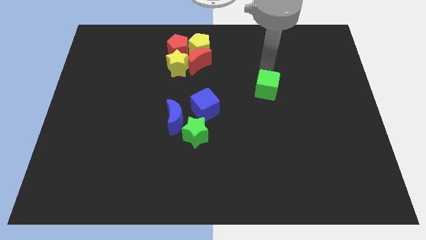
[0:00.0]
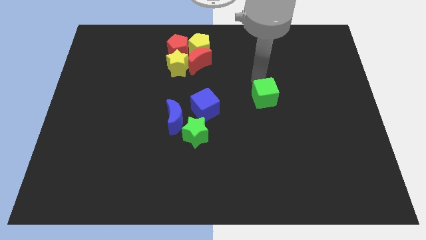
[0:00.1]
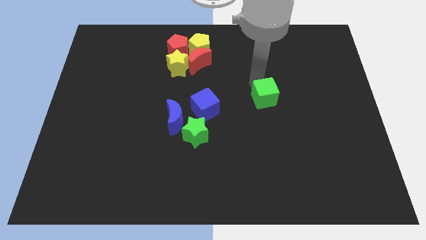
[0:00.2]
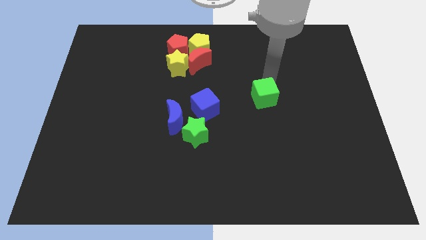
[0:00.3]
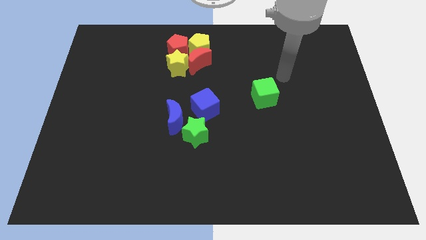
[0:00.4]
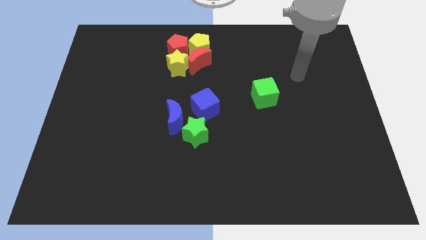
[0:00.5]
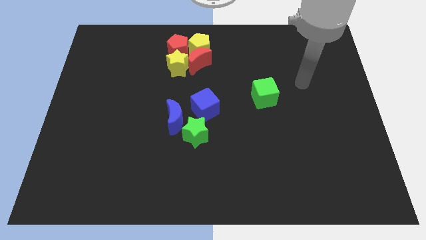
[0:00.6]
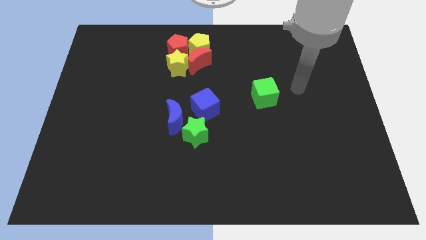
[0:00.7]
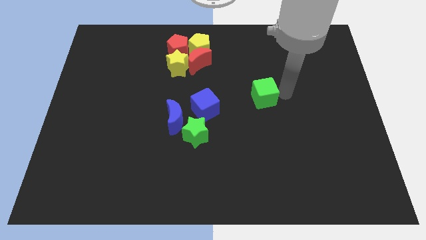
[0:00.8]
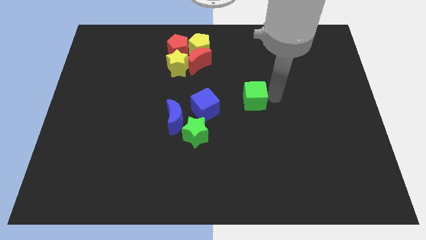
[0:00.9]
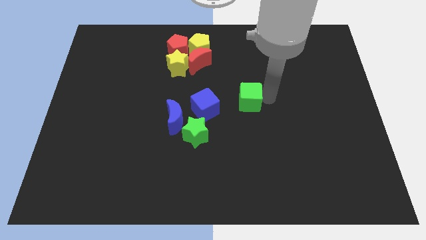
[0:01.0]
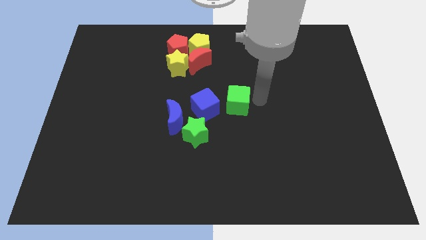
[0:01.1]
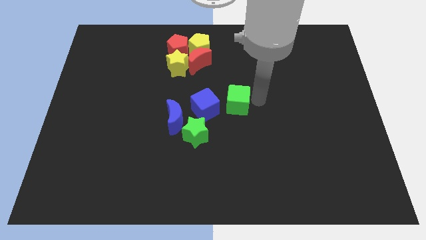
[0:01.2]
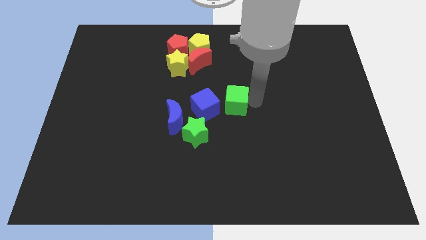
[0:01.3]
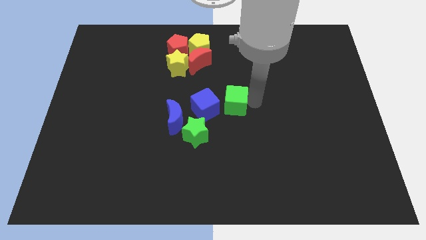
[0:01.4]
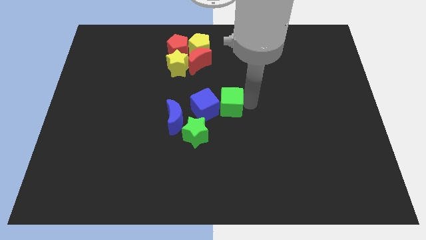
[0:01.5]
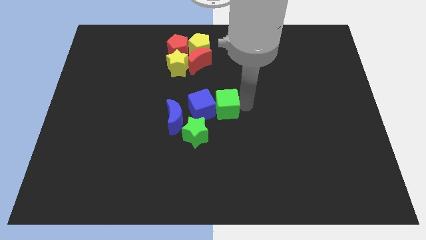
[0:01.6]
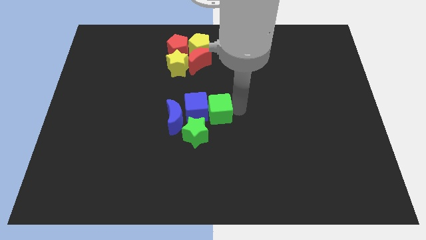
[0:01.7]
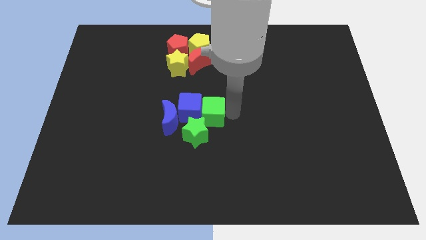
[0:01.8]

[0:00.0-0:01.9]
place the green cube to the right side of the blue cube

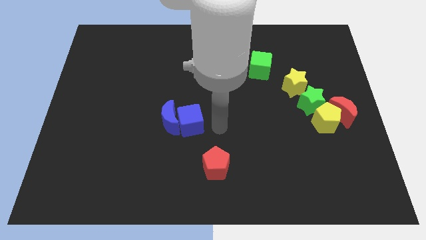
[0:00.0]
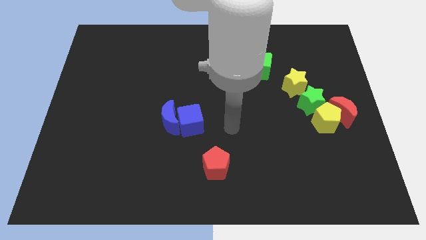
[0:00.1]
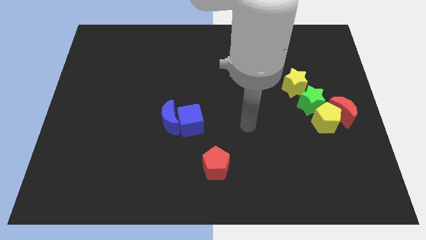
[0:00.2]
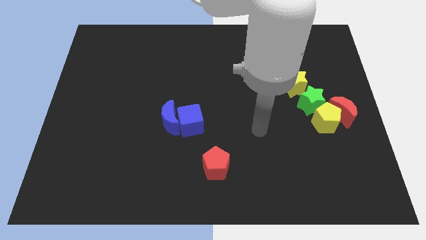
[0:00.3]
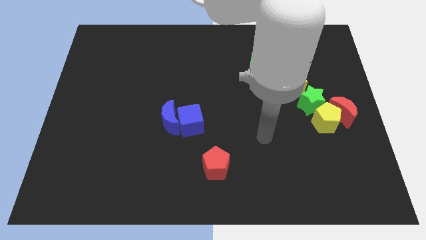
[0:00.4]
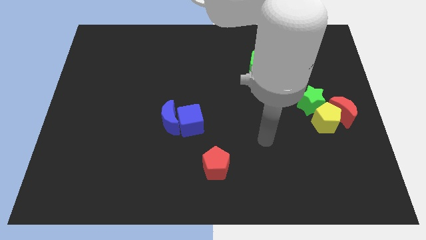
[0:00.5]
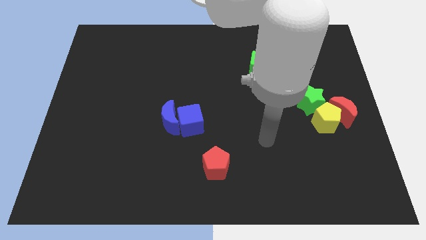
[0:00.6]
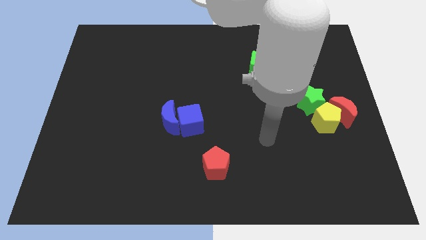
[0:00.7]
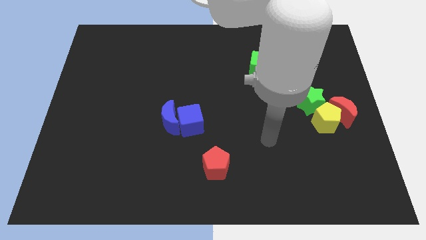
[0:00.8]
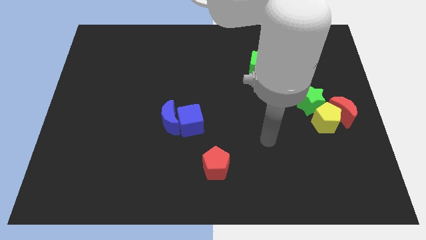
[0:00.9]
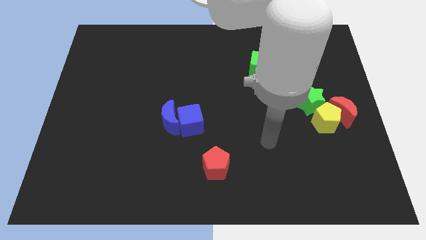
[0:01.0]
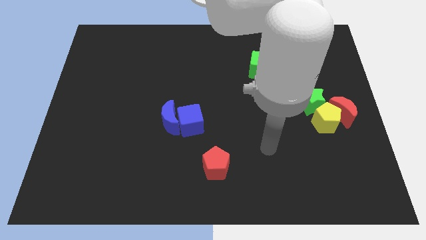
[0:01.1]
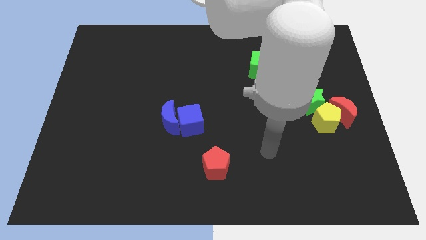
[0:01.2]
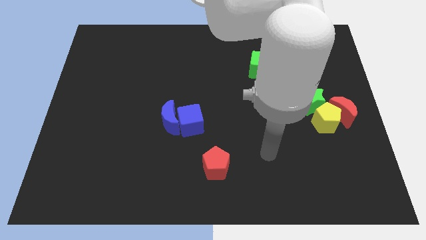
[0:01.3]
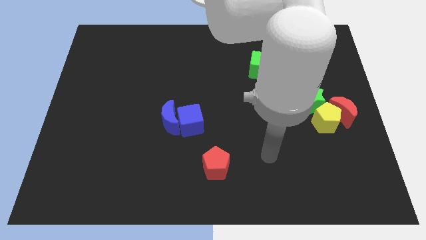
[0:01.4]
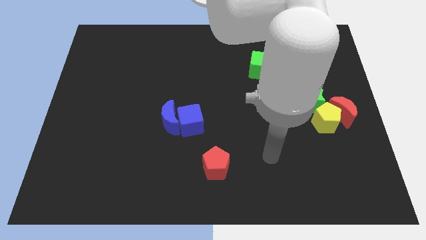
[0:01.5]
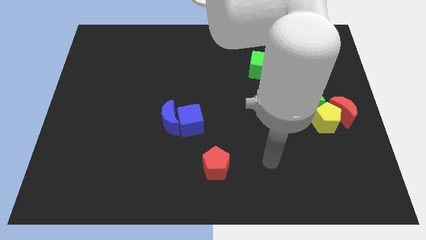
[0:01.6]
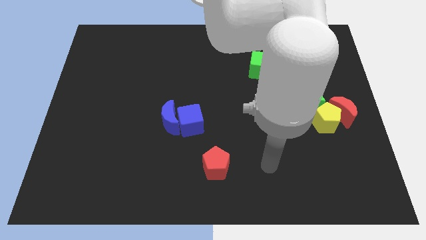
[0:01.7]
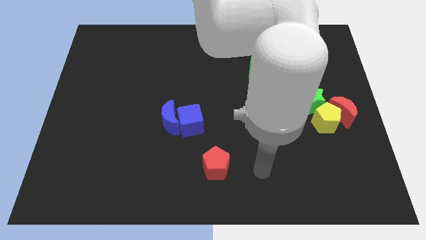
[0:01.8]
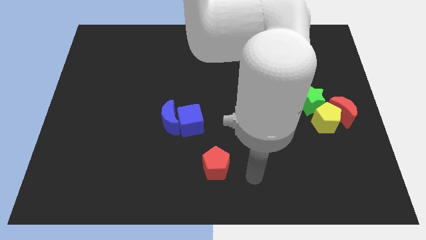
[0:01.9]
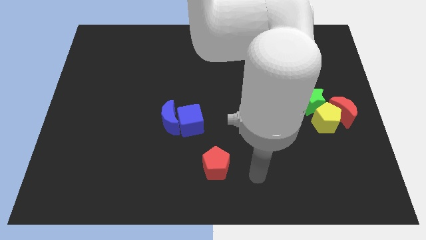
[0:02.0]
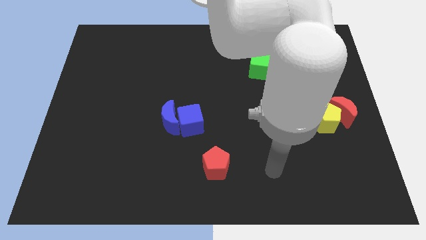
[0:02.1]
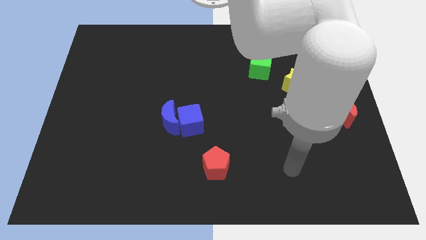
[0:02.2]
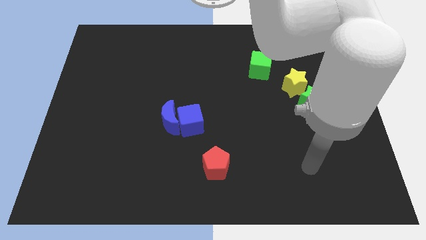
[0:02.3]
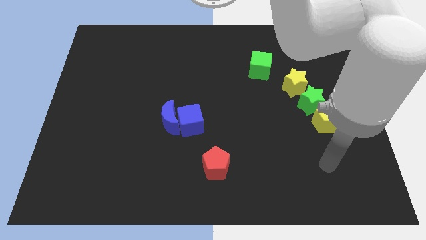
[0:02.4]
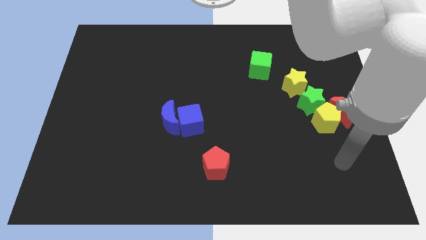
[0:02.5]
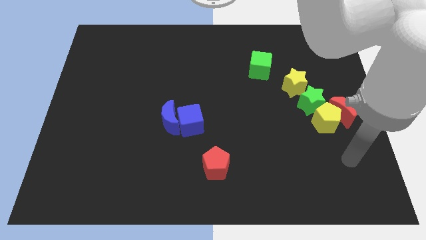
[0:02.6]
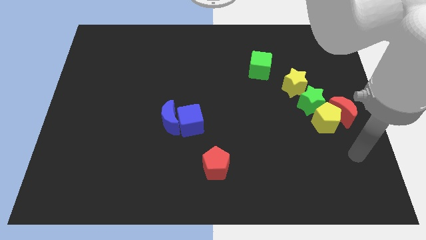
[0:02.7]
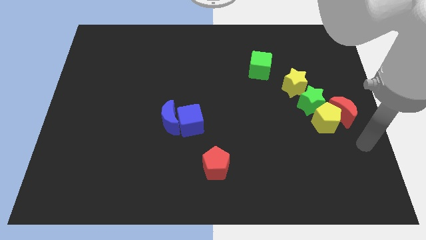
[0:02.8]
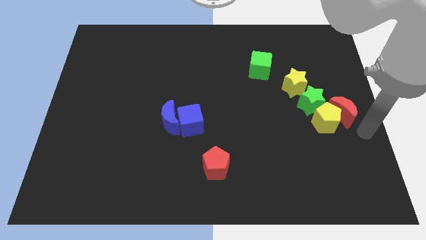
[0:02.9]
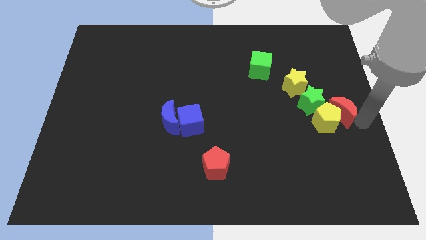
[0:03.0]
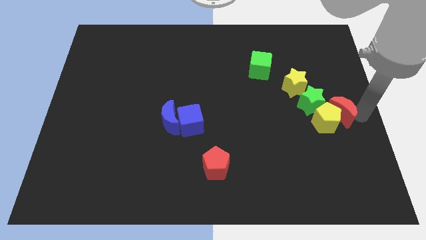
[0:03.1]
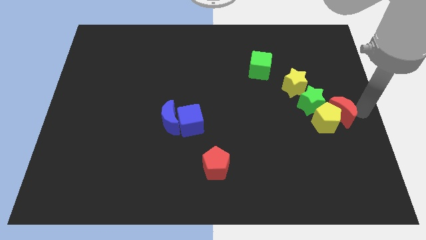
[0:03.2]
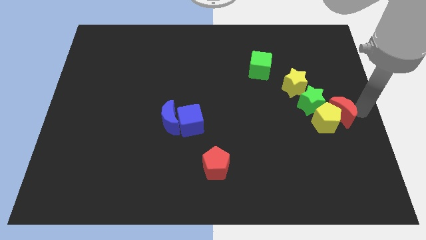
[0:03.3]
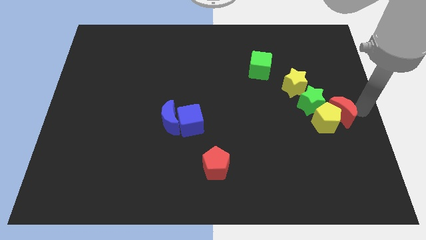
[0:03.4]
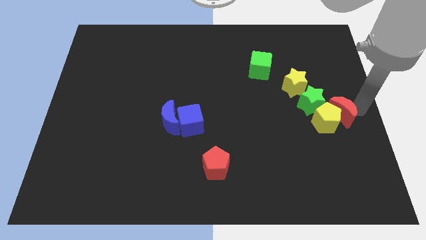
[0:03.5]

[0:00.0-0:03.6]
place your arm above red moon

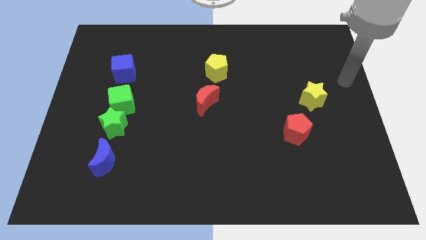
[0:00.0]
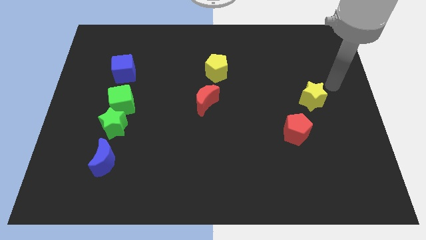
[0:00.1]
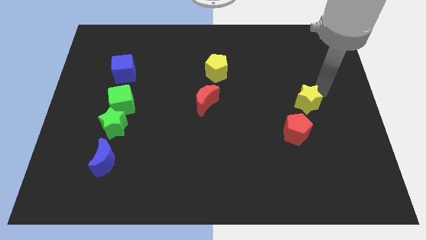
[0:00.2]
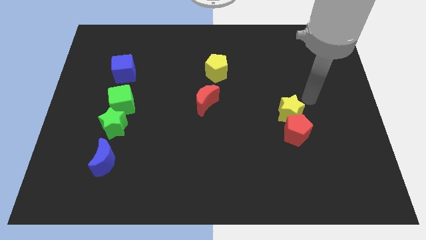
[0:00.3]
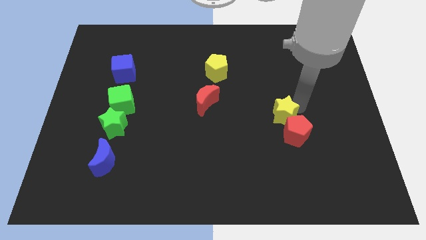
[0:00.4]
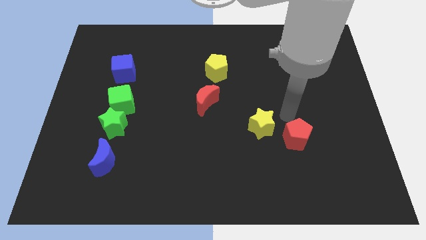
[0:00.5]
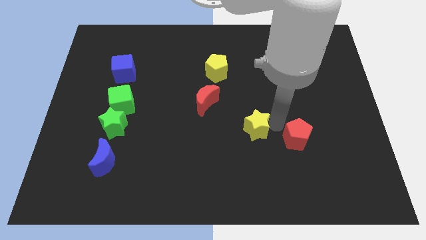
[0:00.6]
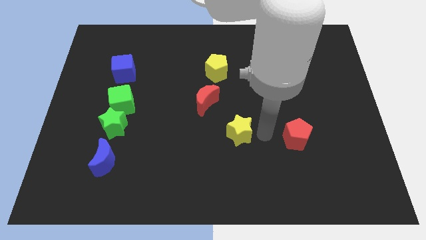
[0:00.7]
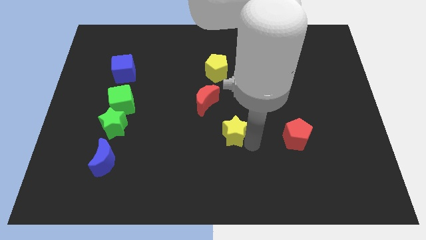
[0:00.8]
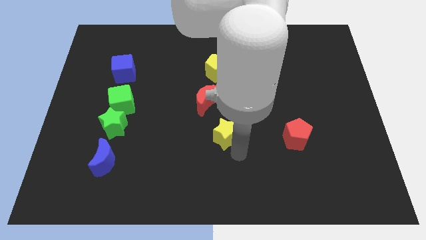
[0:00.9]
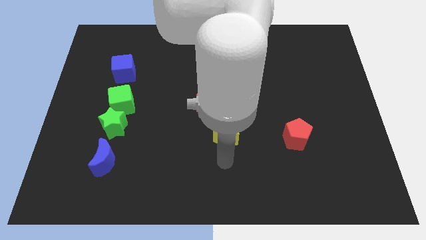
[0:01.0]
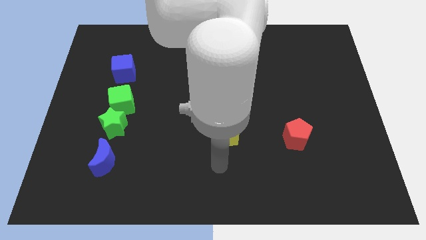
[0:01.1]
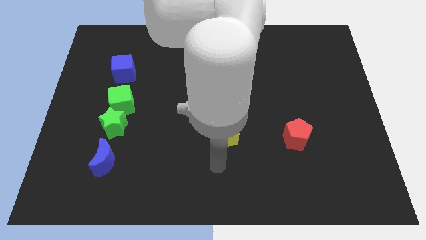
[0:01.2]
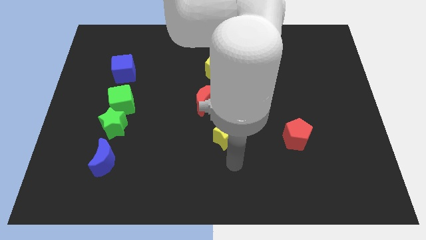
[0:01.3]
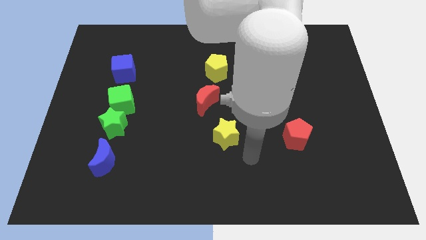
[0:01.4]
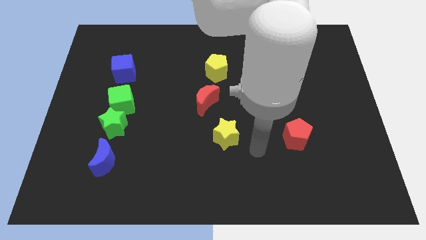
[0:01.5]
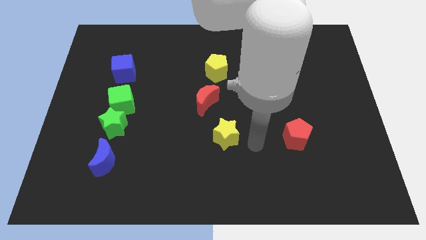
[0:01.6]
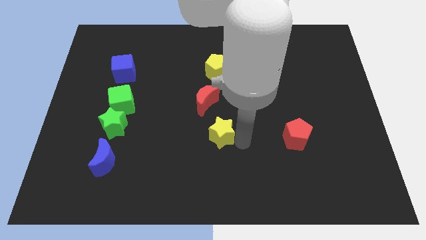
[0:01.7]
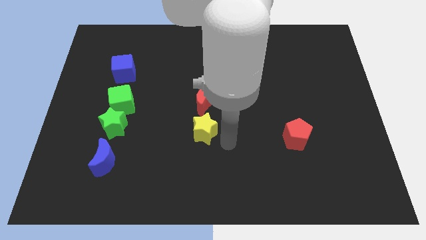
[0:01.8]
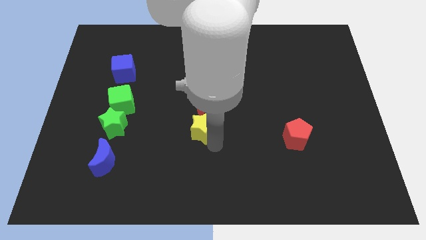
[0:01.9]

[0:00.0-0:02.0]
move the yellow star towards the bottom of the red crescent

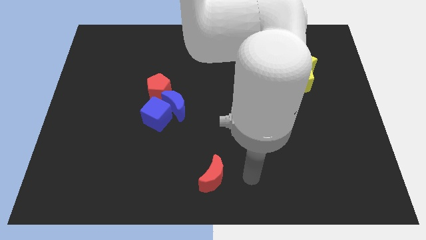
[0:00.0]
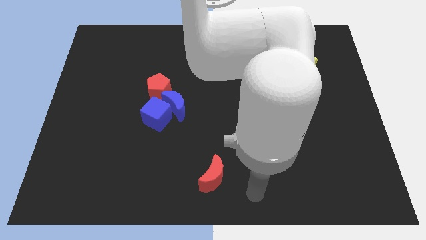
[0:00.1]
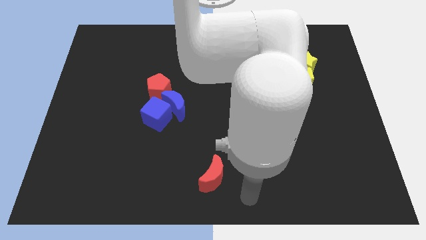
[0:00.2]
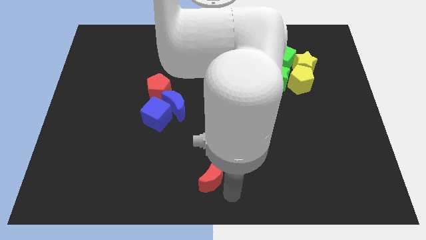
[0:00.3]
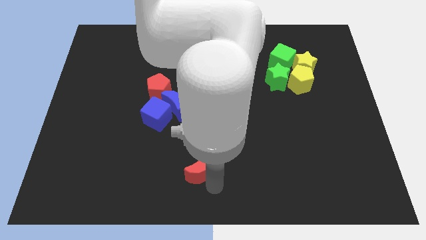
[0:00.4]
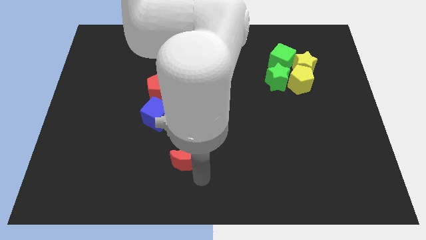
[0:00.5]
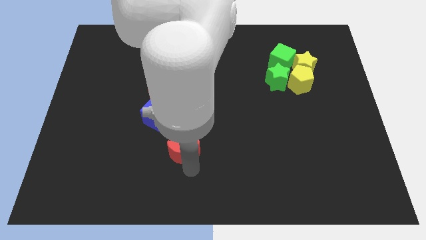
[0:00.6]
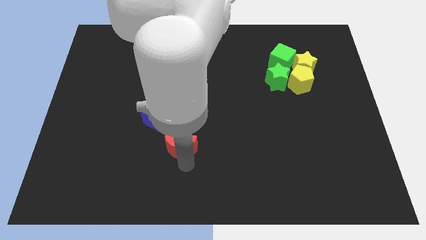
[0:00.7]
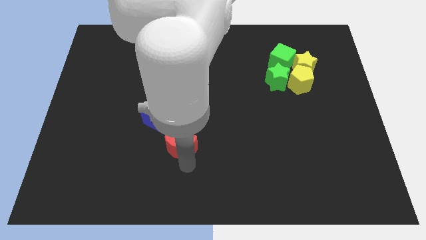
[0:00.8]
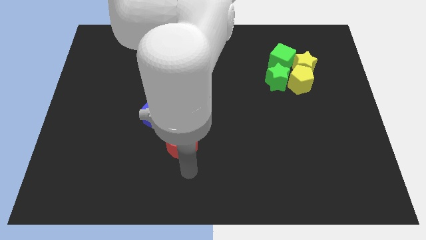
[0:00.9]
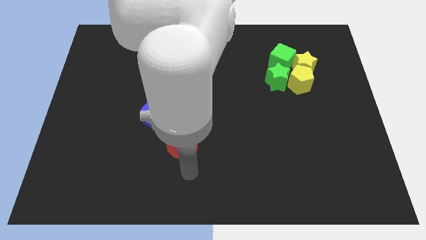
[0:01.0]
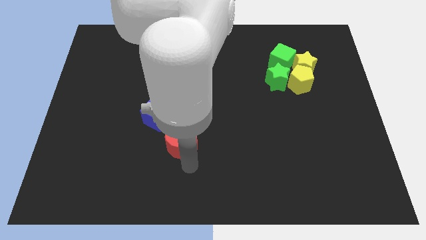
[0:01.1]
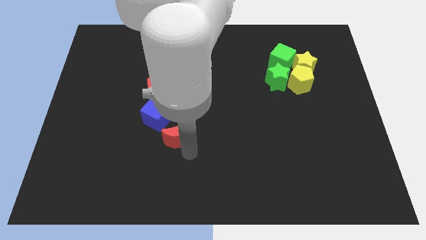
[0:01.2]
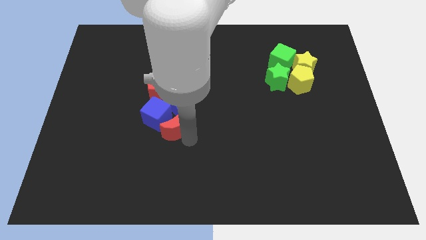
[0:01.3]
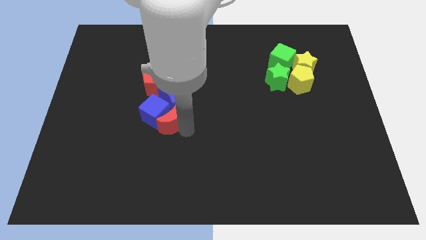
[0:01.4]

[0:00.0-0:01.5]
push the red moon into the group of objects

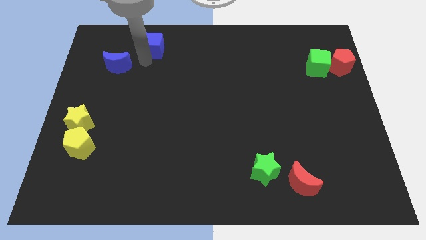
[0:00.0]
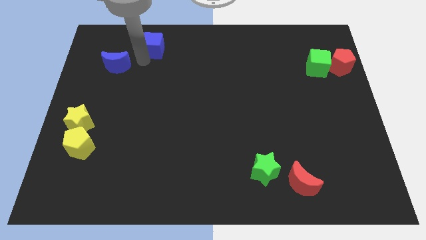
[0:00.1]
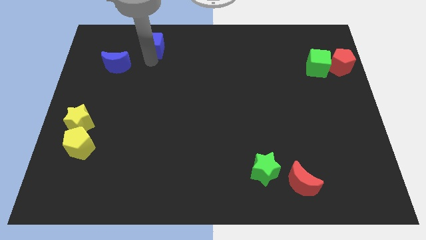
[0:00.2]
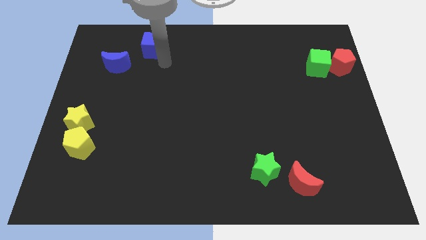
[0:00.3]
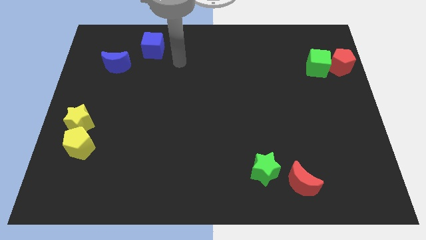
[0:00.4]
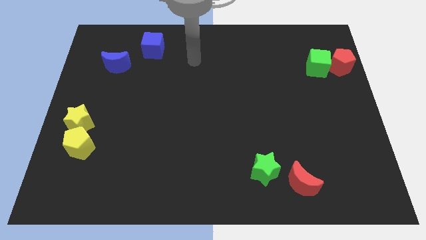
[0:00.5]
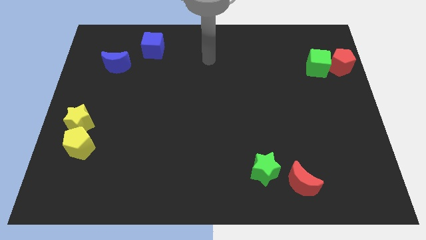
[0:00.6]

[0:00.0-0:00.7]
move your hand away from the blue blocks
